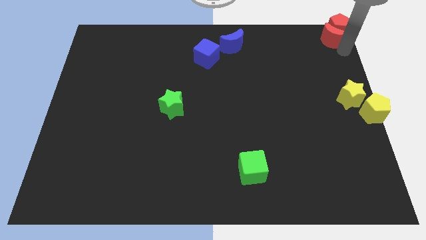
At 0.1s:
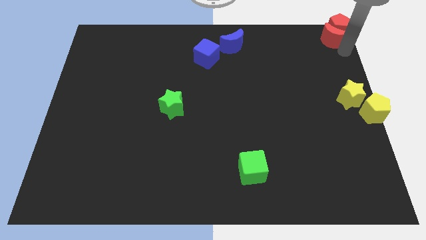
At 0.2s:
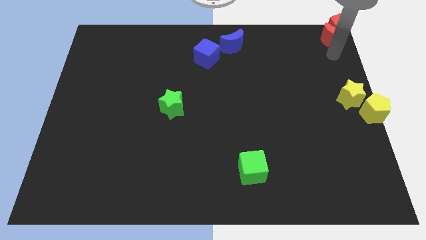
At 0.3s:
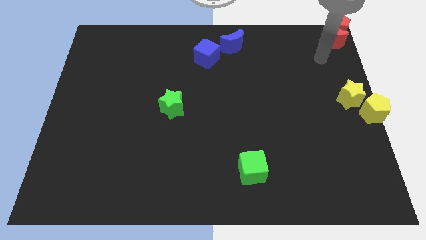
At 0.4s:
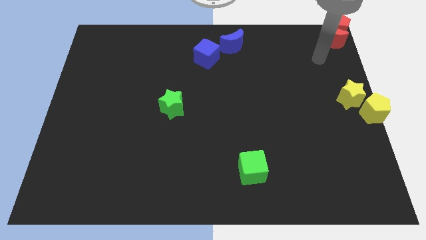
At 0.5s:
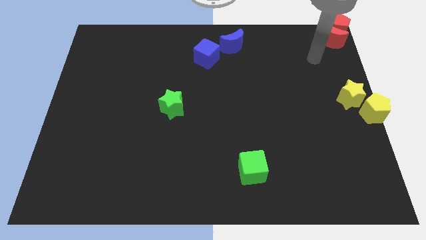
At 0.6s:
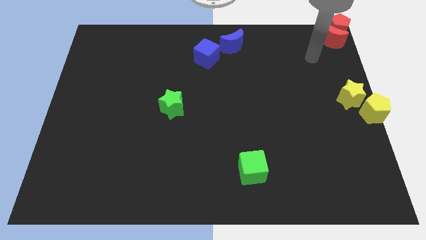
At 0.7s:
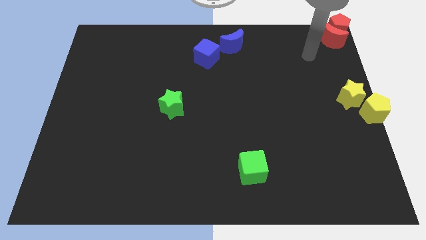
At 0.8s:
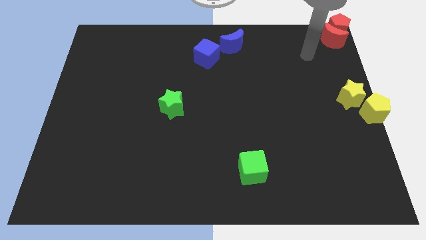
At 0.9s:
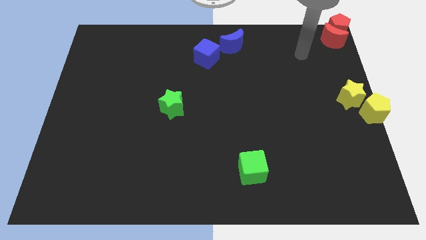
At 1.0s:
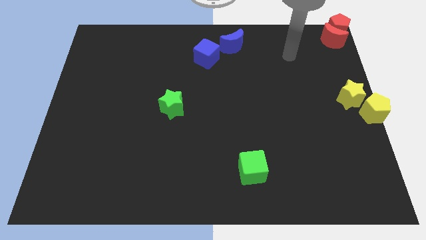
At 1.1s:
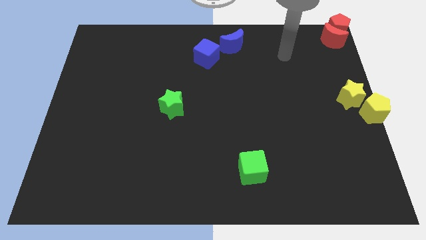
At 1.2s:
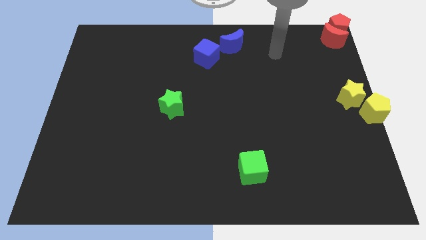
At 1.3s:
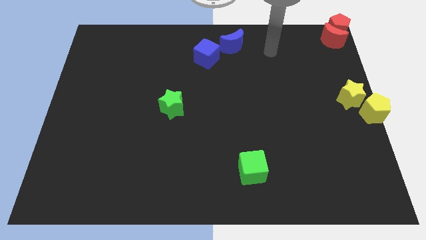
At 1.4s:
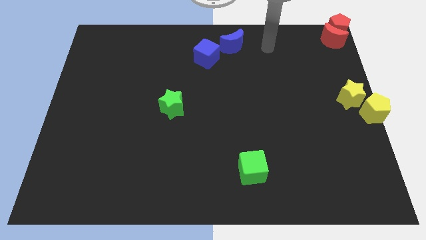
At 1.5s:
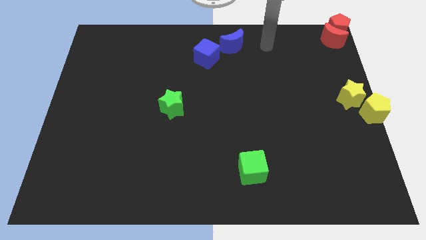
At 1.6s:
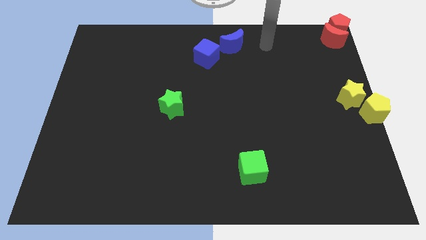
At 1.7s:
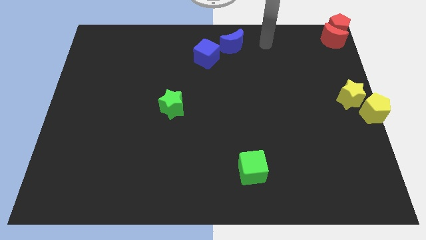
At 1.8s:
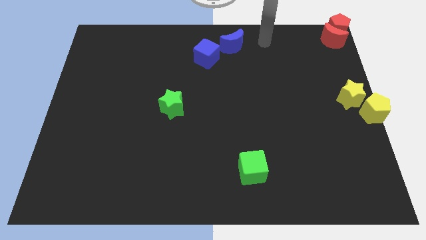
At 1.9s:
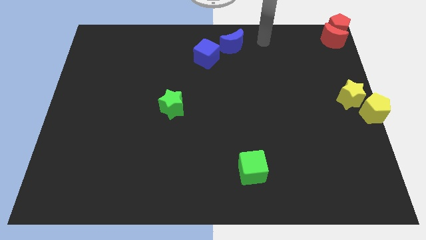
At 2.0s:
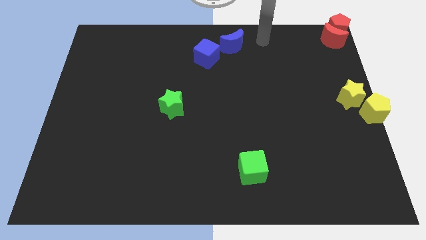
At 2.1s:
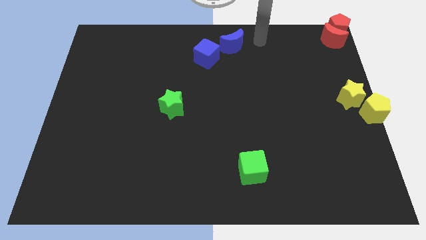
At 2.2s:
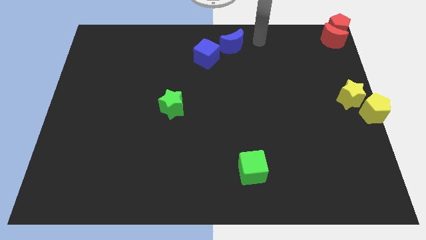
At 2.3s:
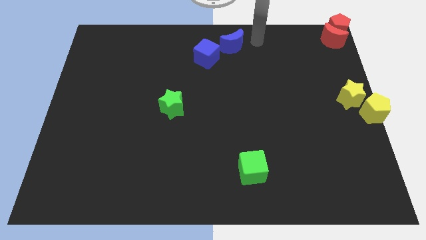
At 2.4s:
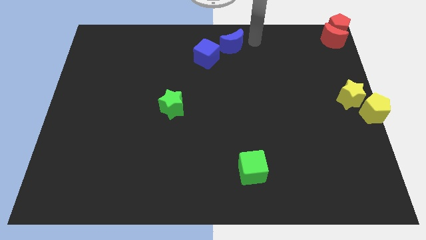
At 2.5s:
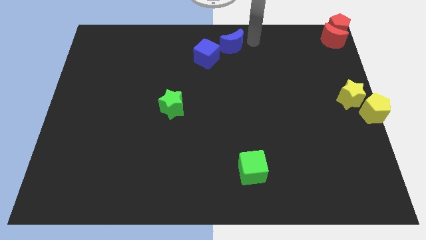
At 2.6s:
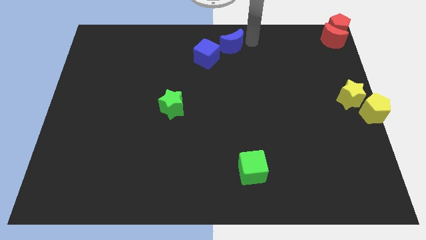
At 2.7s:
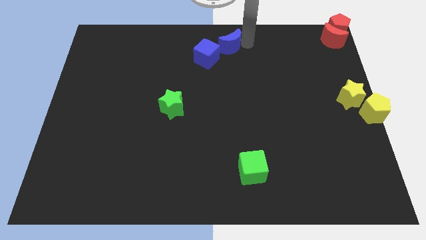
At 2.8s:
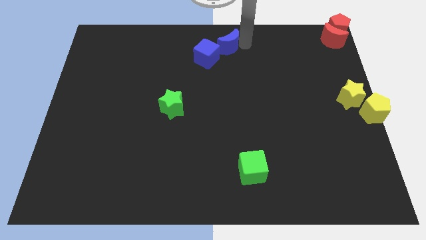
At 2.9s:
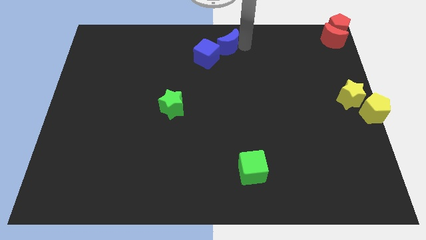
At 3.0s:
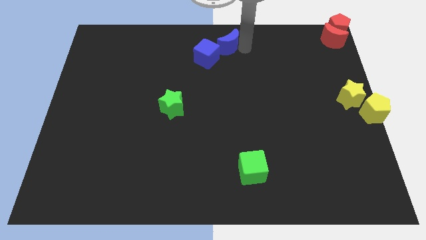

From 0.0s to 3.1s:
slide the blue crescent slightly to the left

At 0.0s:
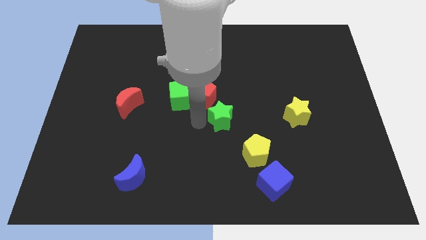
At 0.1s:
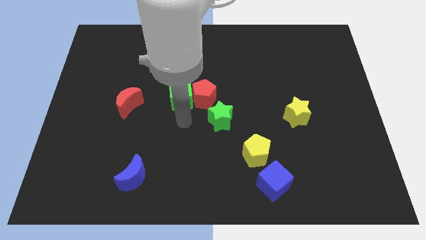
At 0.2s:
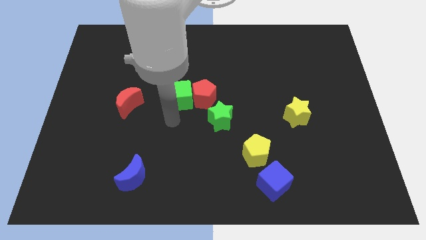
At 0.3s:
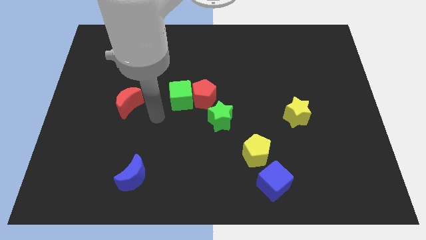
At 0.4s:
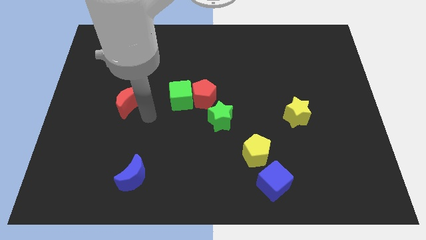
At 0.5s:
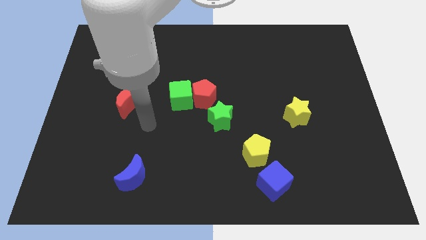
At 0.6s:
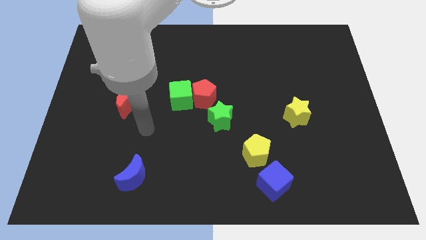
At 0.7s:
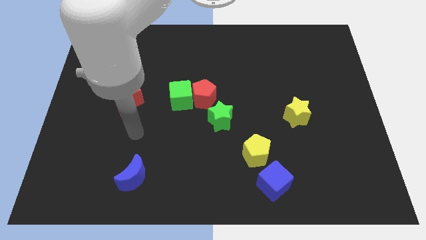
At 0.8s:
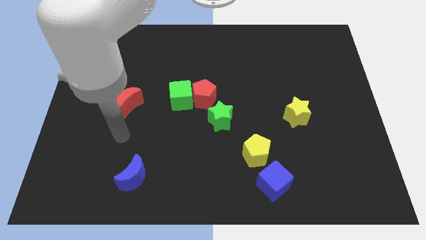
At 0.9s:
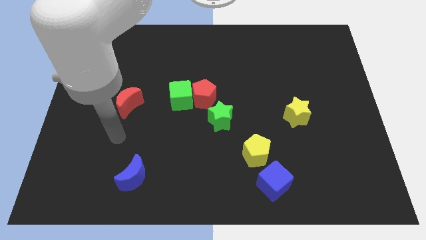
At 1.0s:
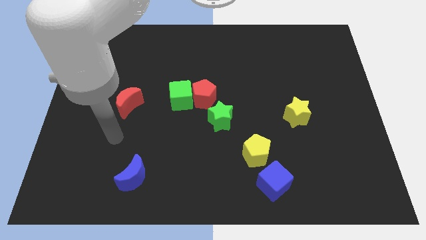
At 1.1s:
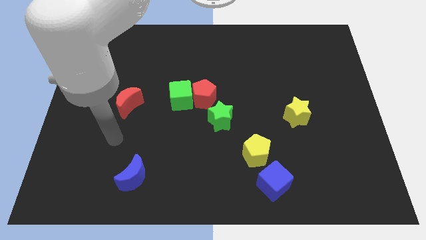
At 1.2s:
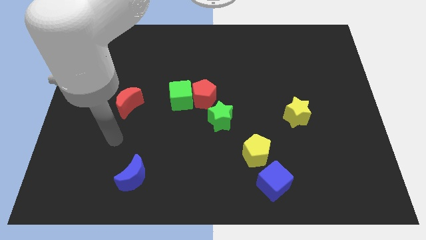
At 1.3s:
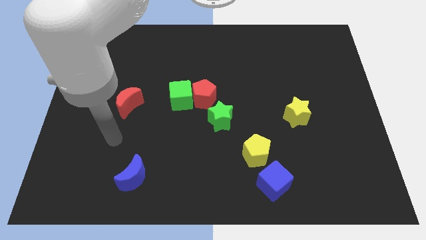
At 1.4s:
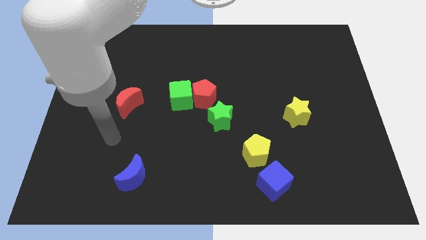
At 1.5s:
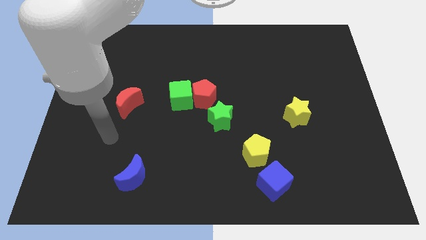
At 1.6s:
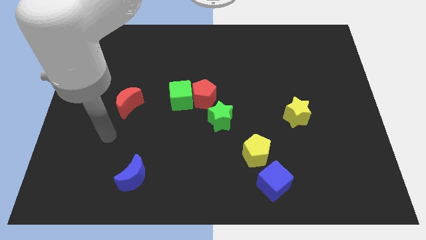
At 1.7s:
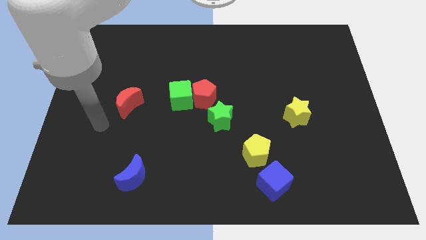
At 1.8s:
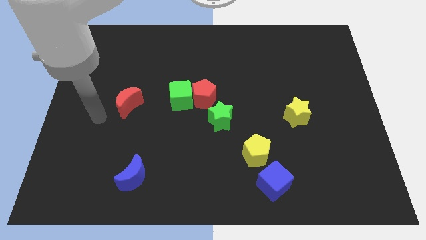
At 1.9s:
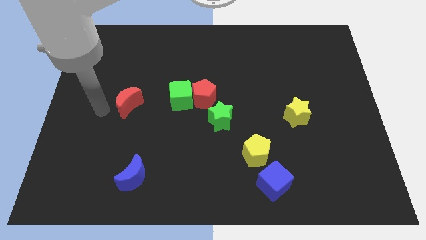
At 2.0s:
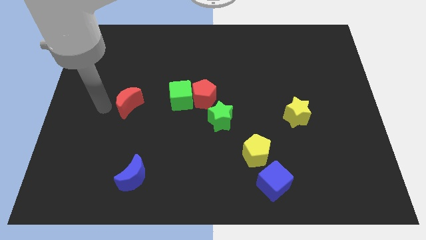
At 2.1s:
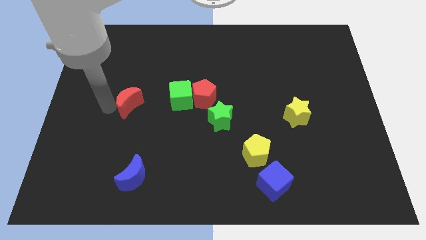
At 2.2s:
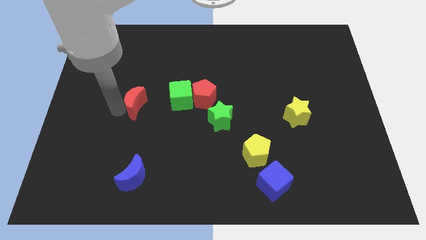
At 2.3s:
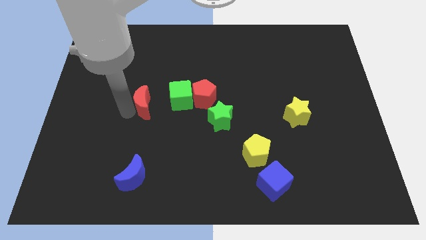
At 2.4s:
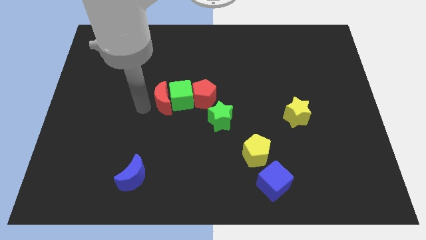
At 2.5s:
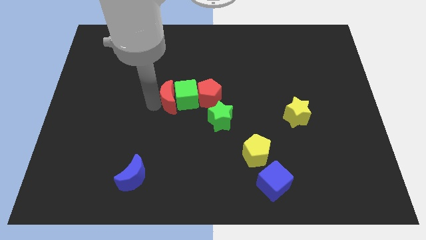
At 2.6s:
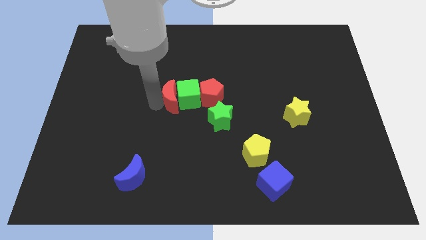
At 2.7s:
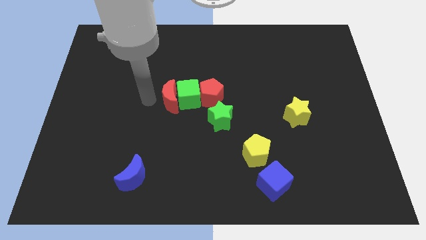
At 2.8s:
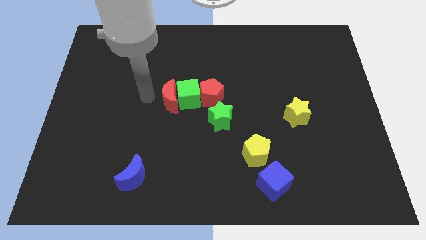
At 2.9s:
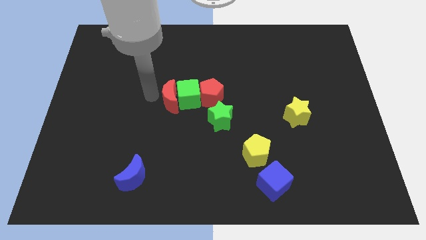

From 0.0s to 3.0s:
move the red crescent to the left of the green cube

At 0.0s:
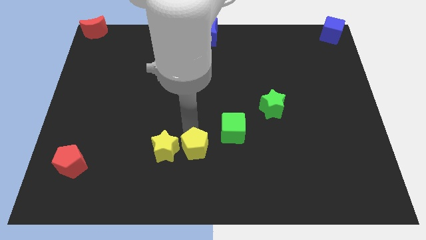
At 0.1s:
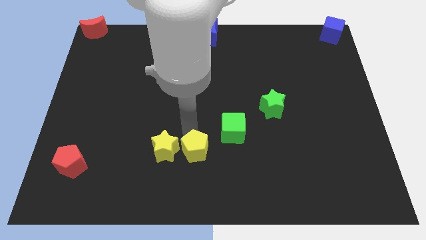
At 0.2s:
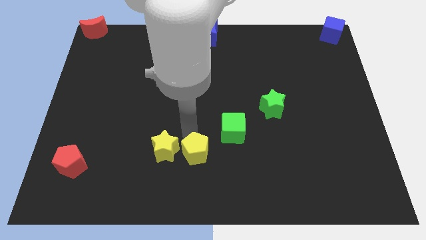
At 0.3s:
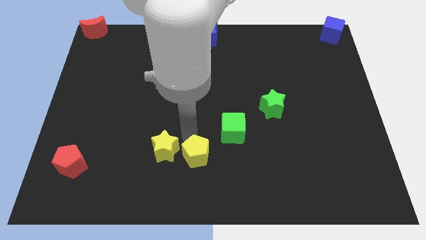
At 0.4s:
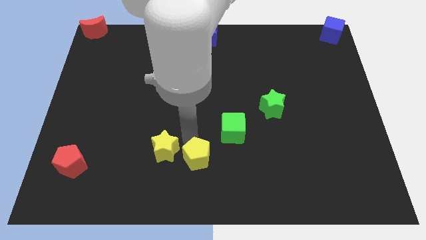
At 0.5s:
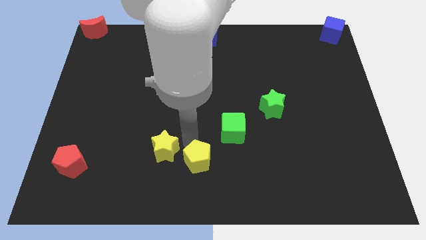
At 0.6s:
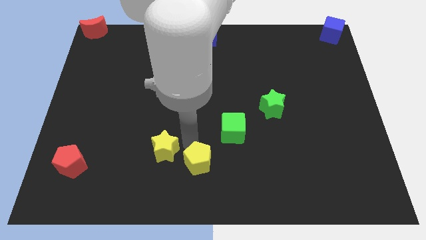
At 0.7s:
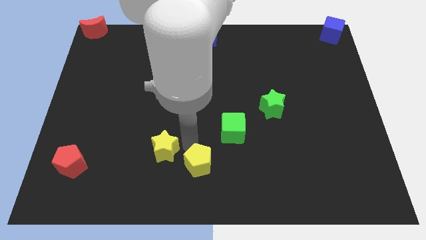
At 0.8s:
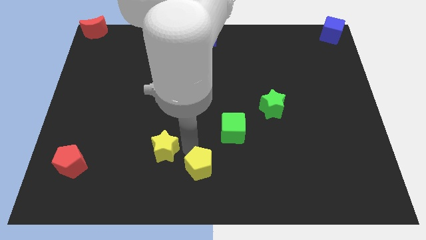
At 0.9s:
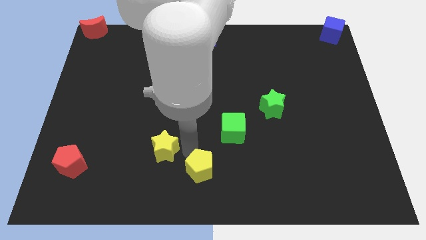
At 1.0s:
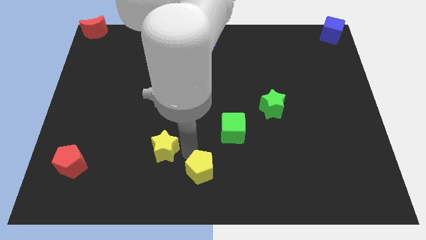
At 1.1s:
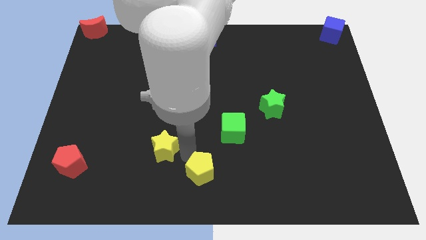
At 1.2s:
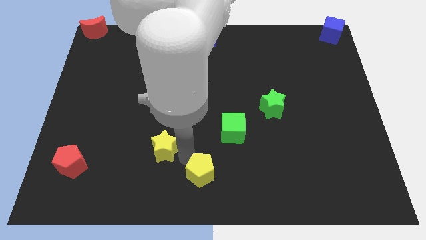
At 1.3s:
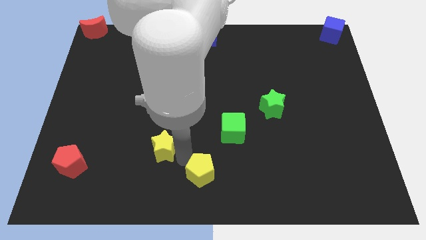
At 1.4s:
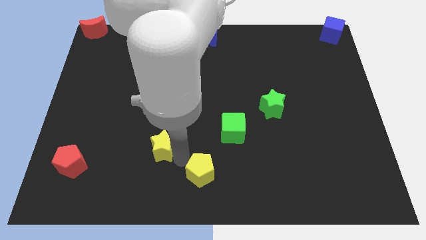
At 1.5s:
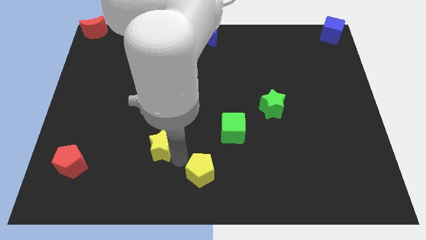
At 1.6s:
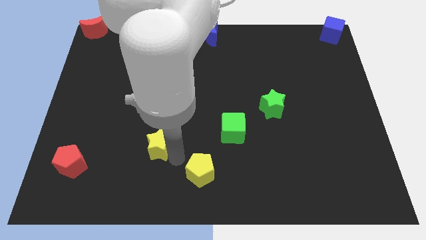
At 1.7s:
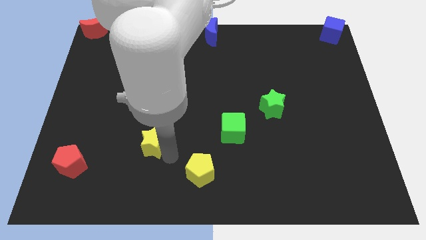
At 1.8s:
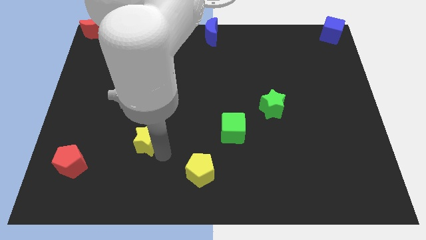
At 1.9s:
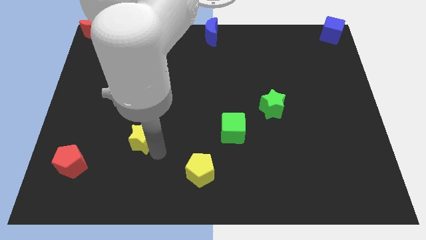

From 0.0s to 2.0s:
move the yellow pentagon and the yellow star away from each other

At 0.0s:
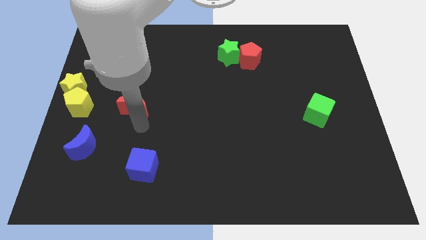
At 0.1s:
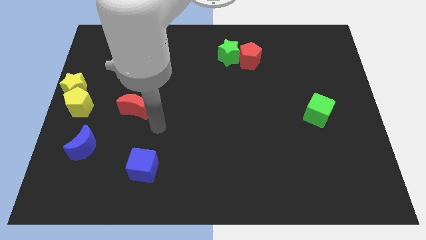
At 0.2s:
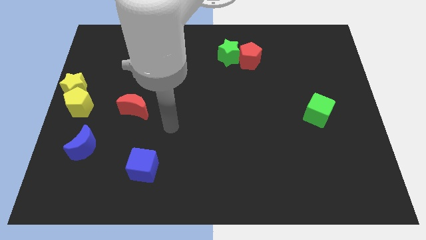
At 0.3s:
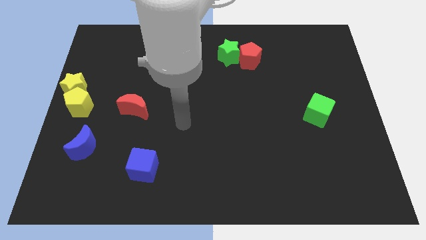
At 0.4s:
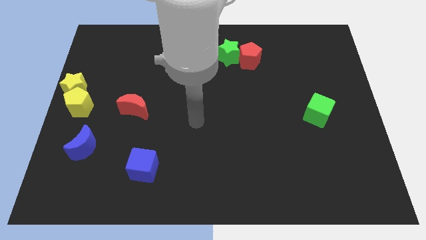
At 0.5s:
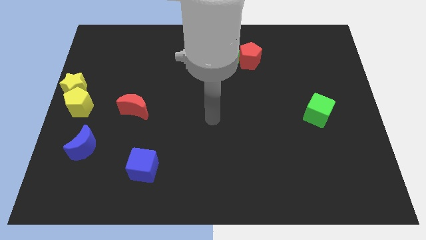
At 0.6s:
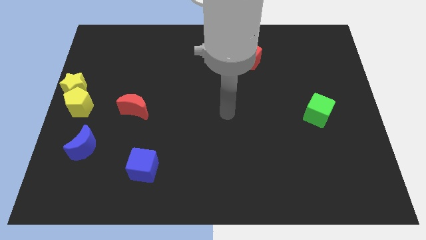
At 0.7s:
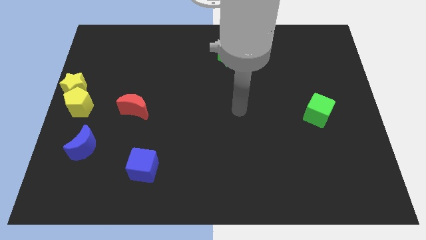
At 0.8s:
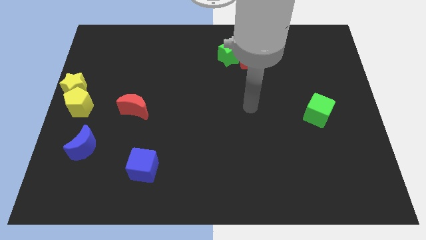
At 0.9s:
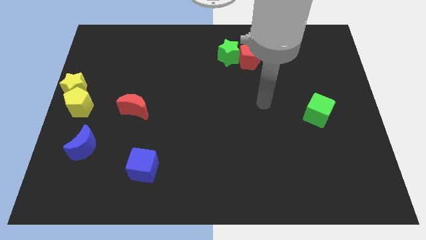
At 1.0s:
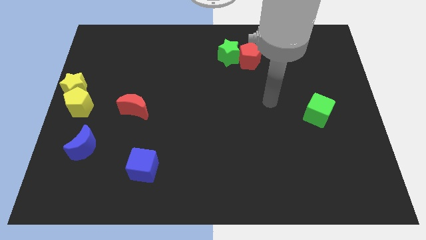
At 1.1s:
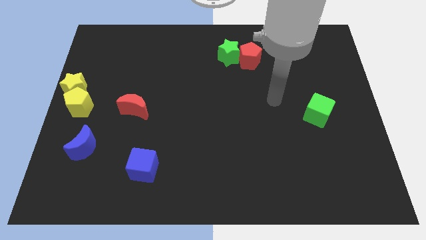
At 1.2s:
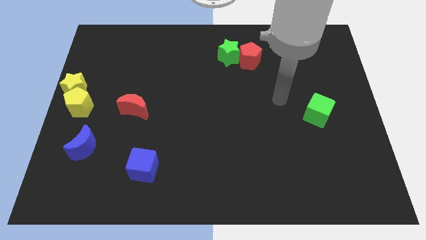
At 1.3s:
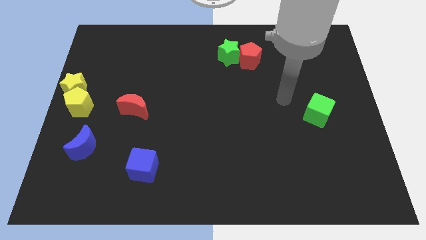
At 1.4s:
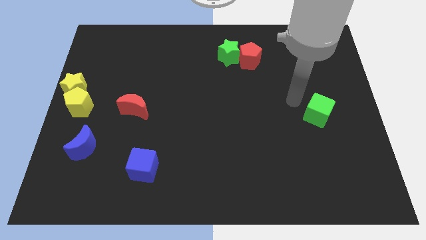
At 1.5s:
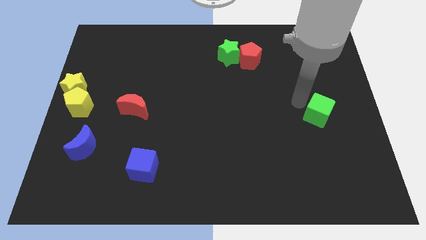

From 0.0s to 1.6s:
move your arm into the green cube
